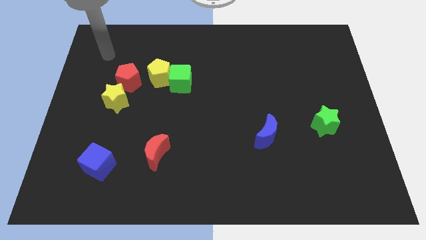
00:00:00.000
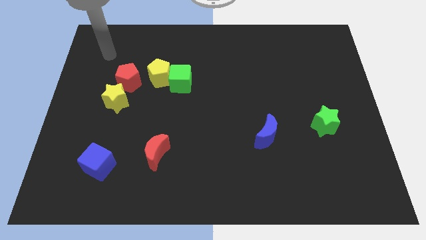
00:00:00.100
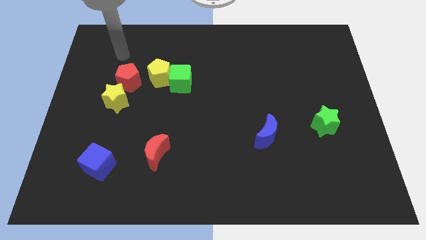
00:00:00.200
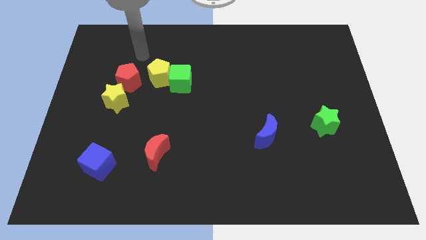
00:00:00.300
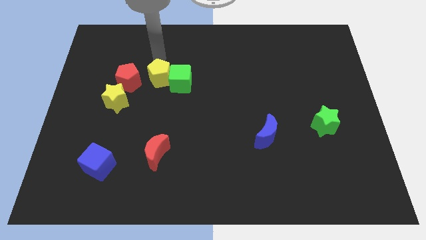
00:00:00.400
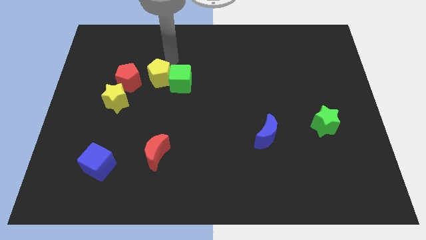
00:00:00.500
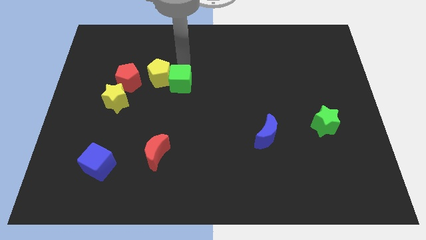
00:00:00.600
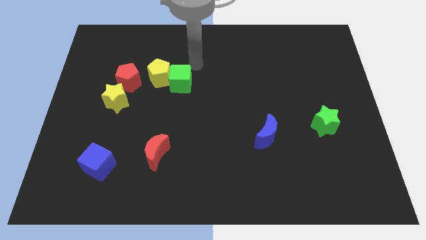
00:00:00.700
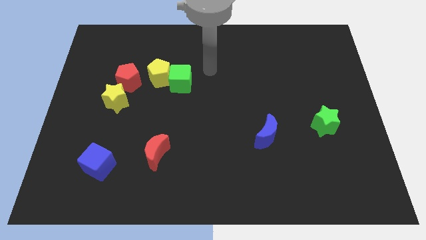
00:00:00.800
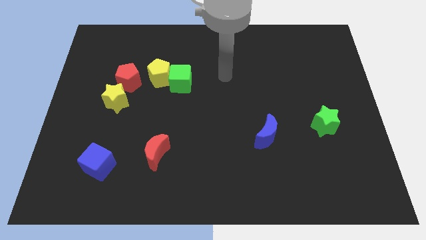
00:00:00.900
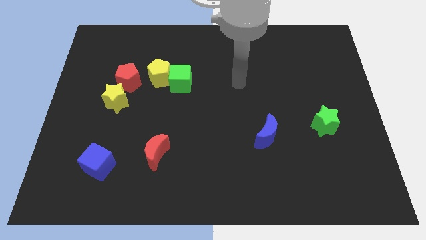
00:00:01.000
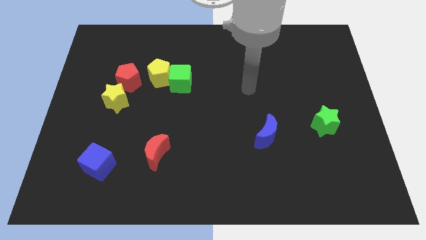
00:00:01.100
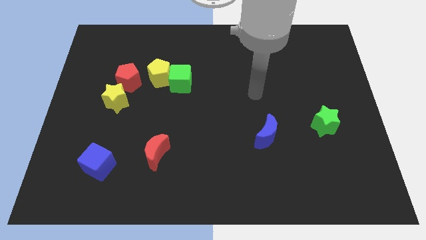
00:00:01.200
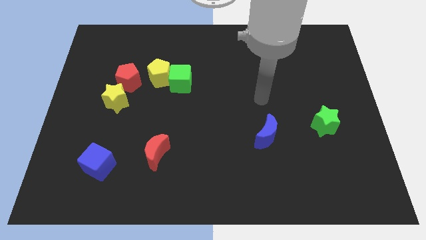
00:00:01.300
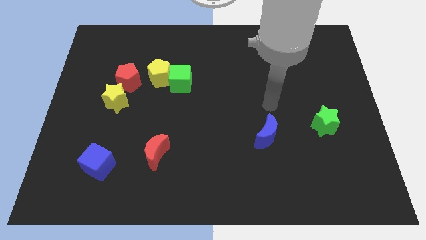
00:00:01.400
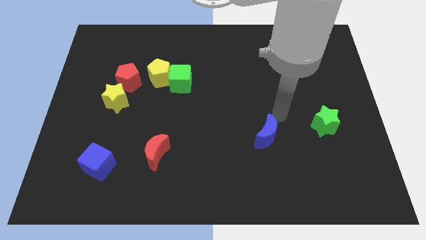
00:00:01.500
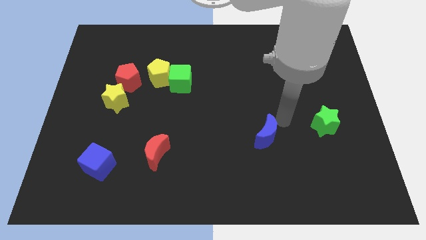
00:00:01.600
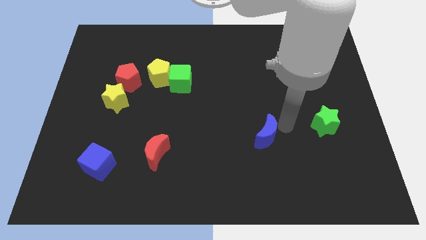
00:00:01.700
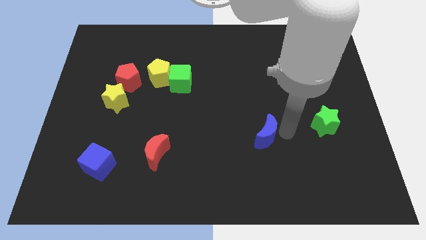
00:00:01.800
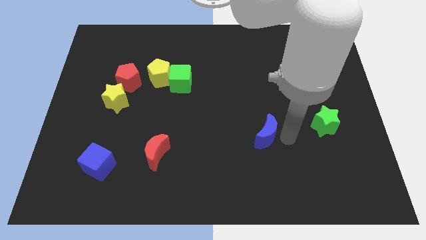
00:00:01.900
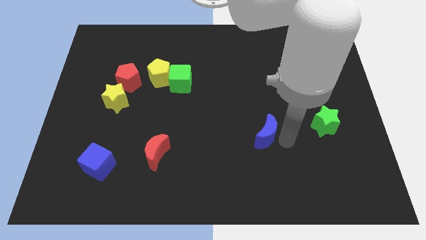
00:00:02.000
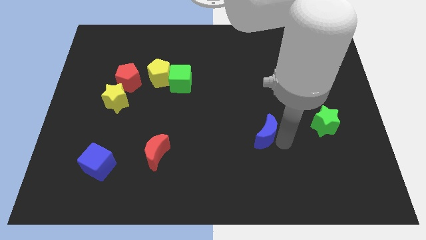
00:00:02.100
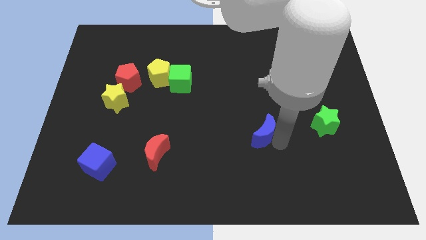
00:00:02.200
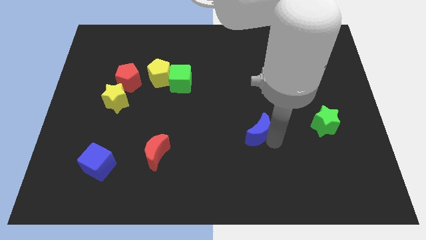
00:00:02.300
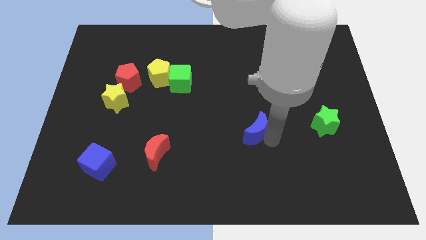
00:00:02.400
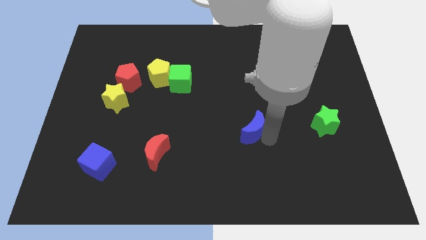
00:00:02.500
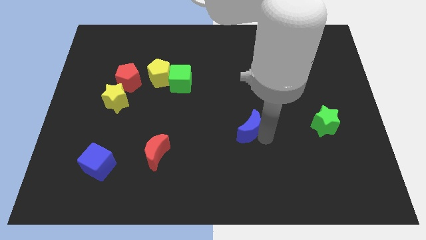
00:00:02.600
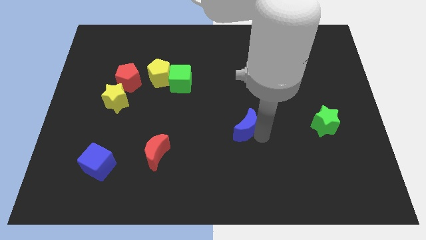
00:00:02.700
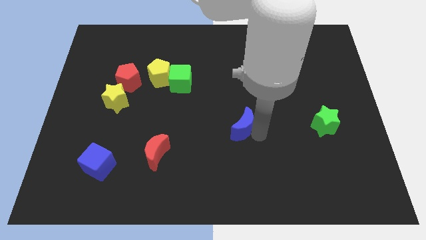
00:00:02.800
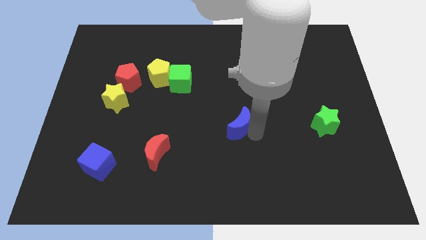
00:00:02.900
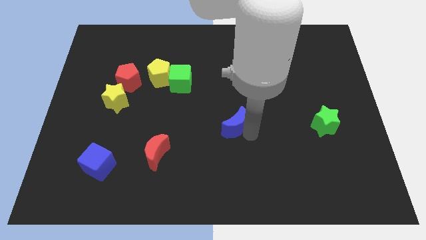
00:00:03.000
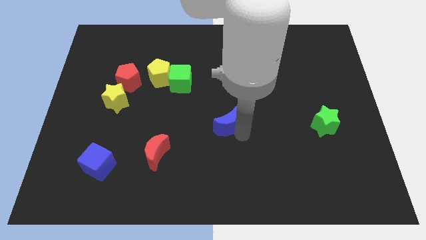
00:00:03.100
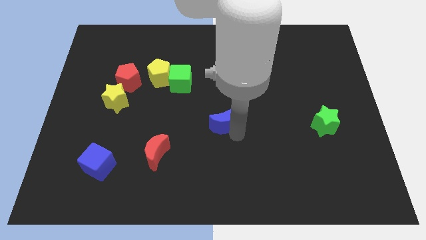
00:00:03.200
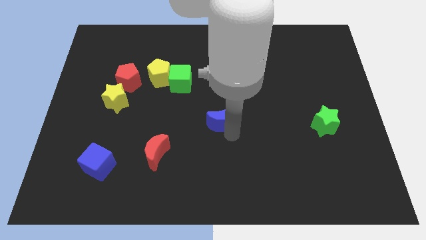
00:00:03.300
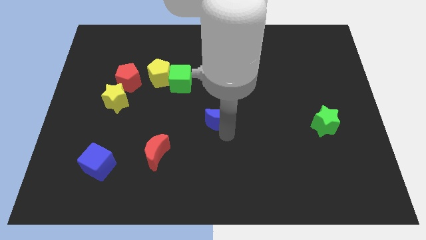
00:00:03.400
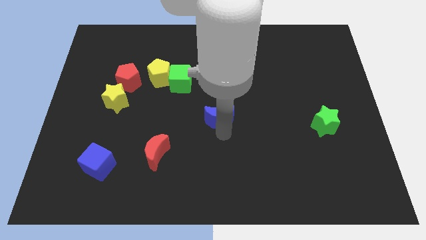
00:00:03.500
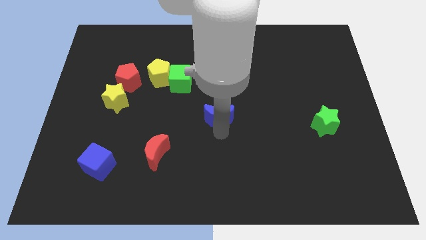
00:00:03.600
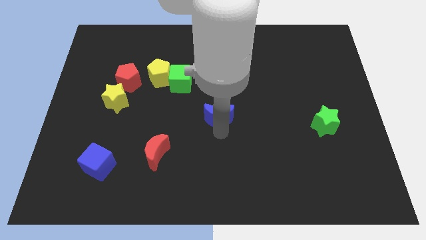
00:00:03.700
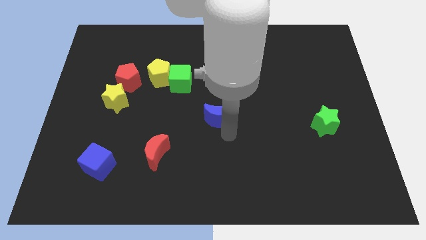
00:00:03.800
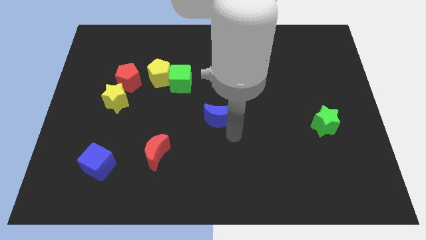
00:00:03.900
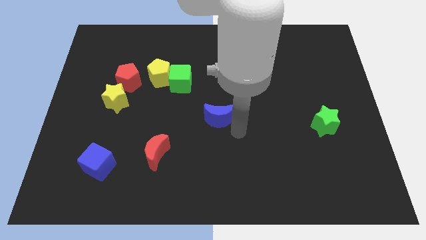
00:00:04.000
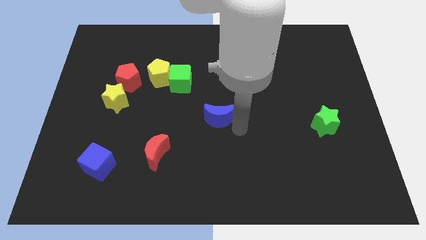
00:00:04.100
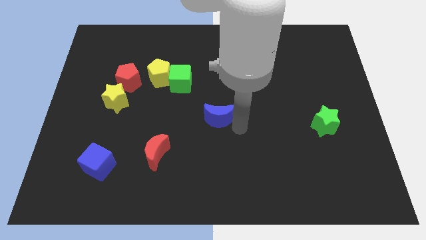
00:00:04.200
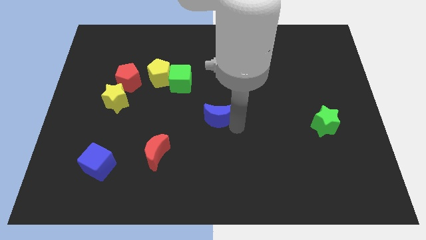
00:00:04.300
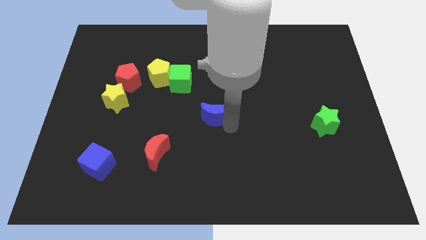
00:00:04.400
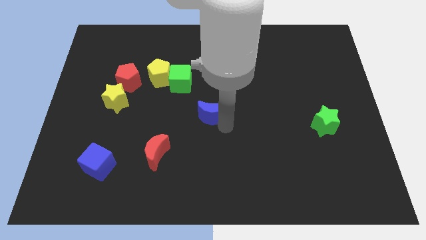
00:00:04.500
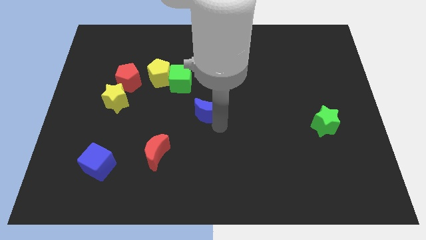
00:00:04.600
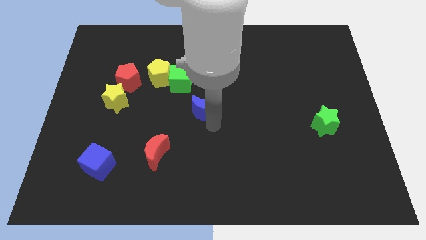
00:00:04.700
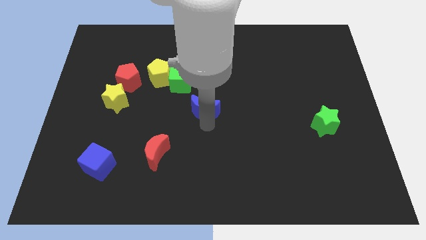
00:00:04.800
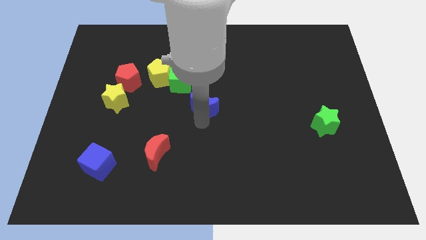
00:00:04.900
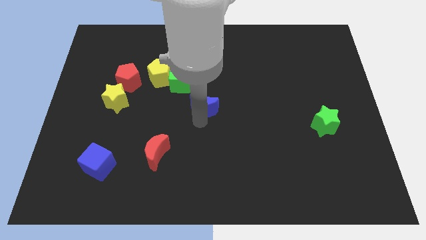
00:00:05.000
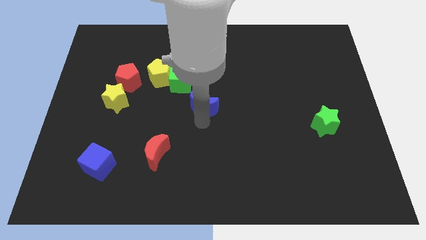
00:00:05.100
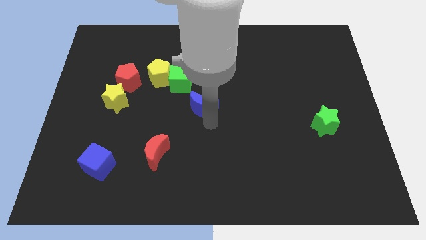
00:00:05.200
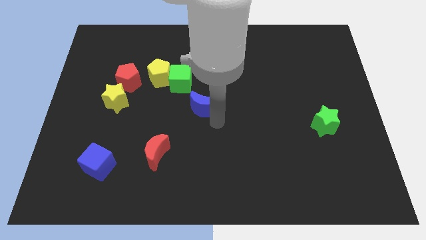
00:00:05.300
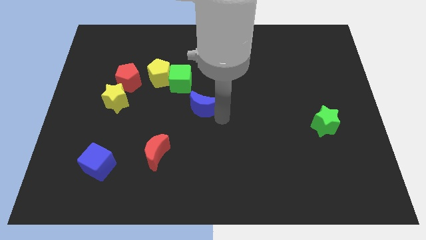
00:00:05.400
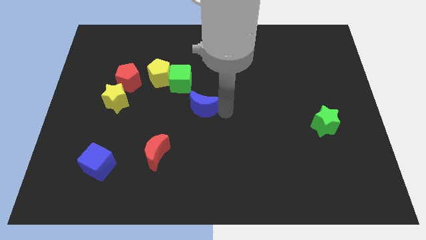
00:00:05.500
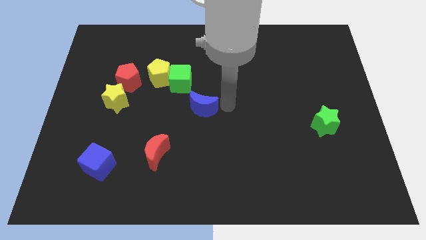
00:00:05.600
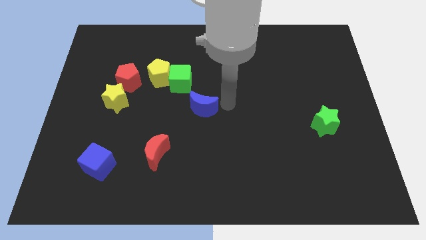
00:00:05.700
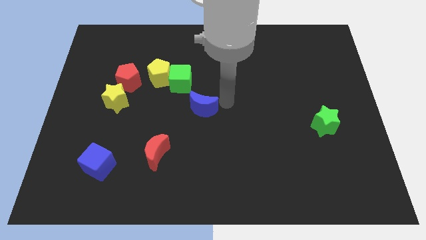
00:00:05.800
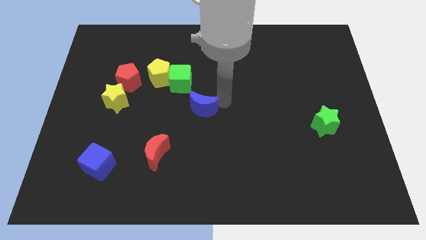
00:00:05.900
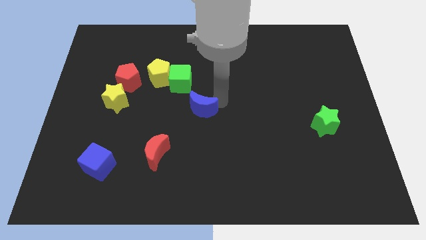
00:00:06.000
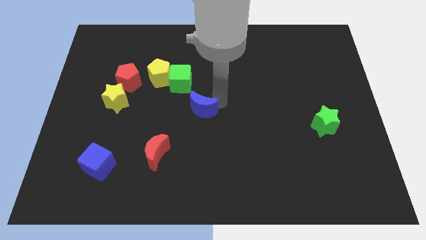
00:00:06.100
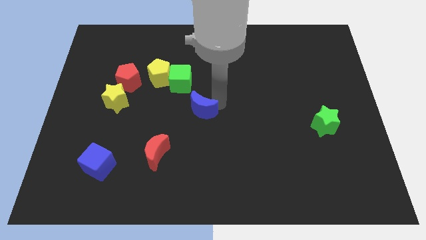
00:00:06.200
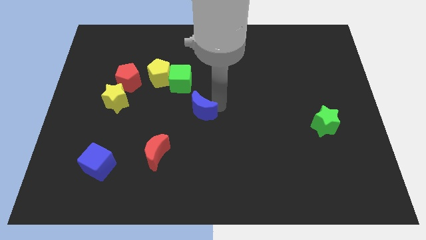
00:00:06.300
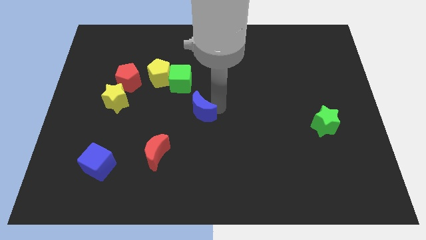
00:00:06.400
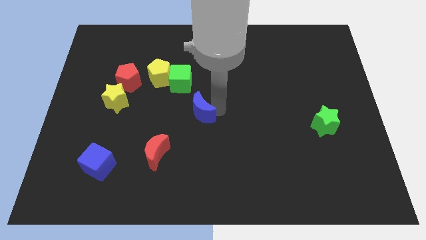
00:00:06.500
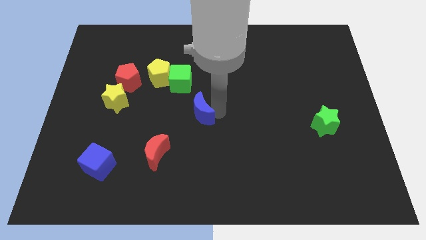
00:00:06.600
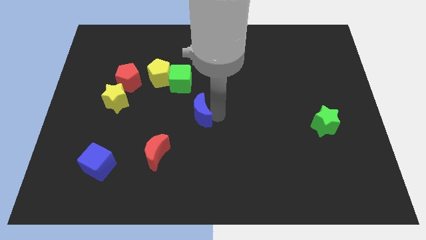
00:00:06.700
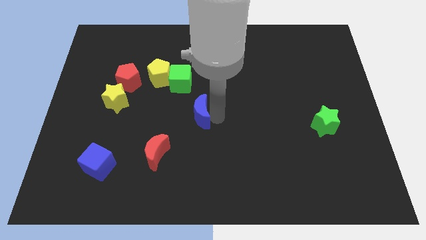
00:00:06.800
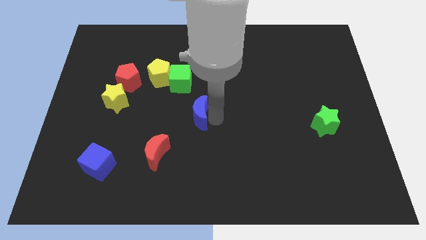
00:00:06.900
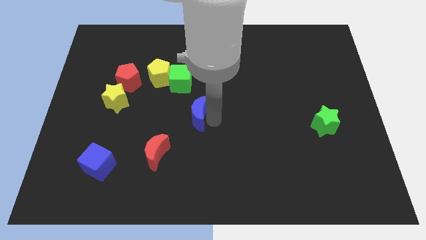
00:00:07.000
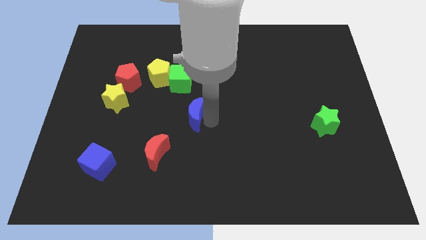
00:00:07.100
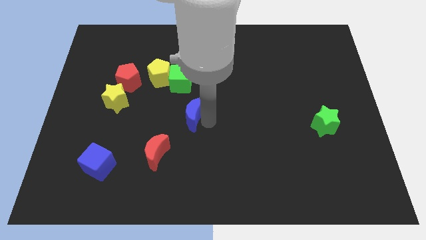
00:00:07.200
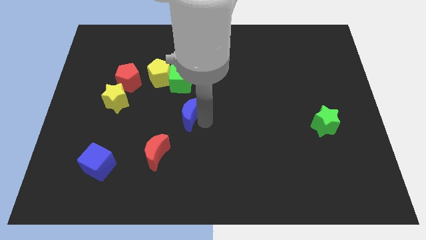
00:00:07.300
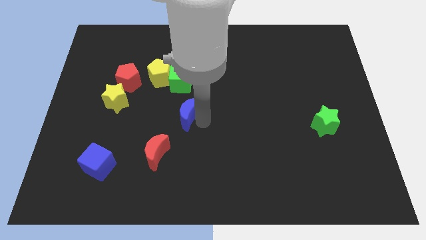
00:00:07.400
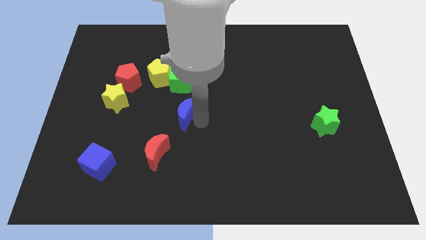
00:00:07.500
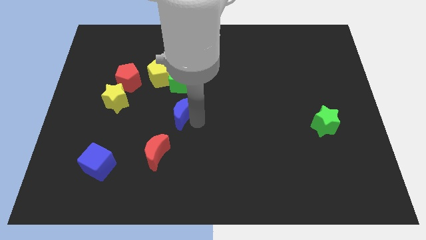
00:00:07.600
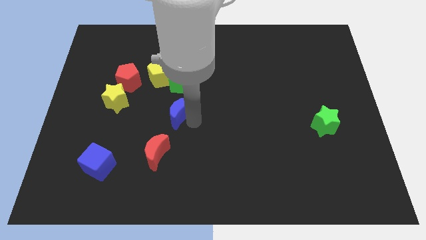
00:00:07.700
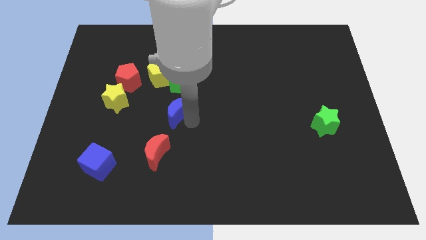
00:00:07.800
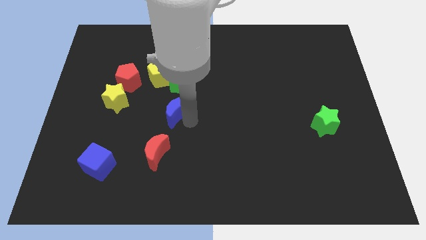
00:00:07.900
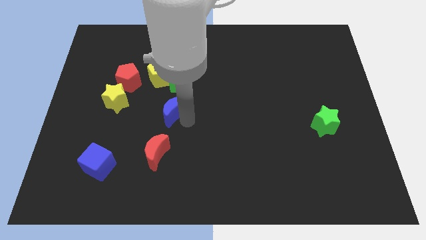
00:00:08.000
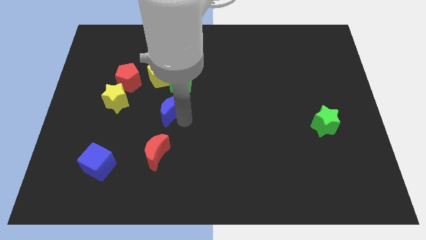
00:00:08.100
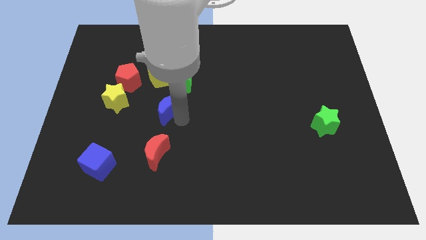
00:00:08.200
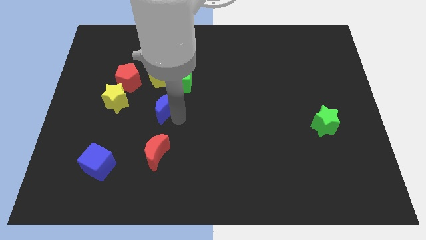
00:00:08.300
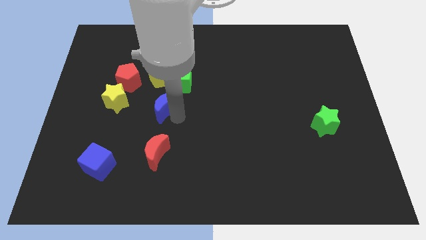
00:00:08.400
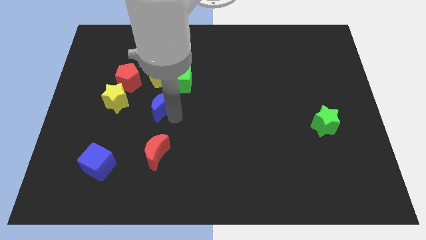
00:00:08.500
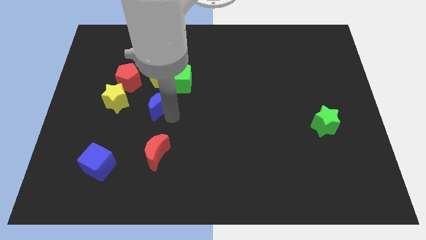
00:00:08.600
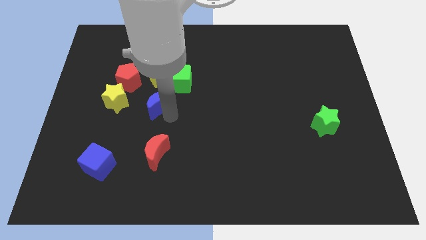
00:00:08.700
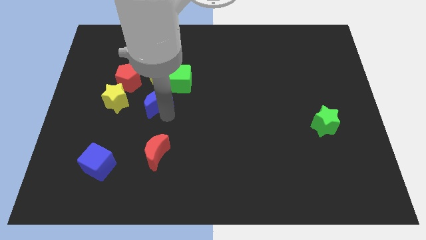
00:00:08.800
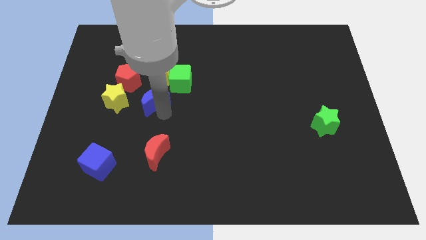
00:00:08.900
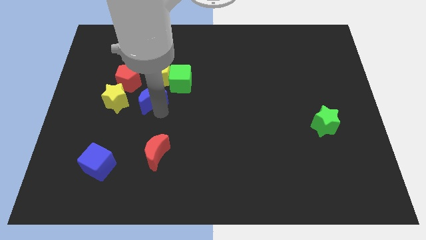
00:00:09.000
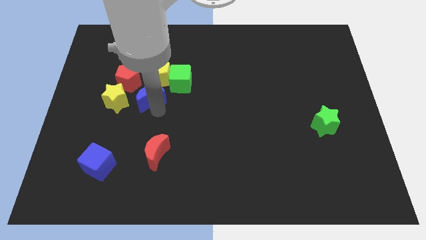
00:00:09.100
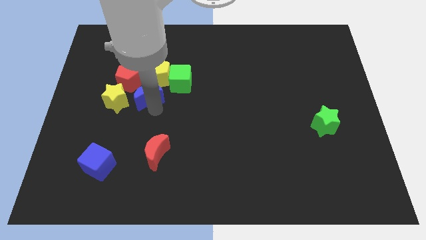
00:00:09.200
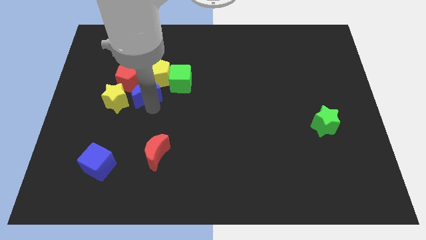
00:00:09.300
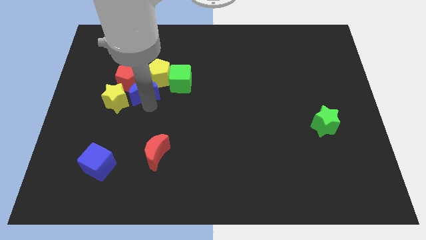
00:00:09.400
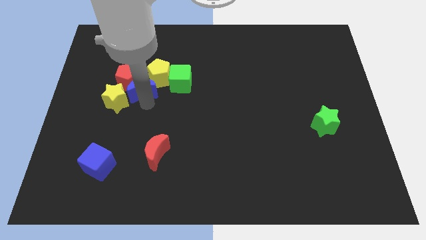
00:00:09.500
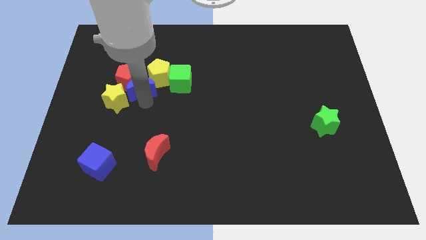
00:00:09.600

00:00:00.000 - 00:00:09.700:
slide the blue moon to the red pentagon
